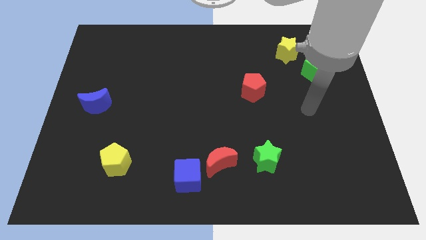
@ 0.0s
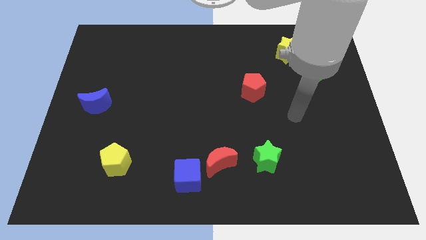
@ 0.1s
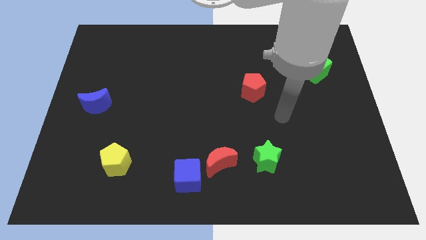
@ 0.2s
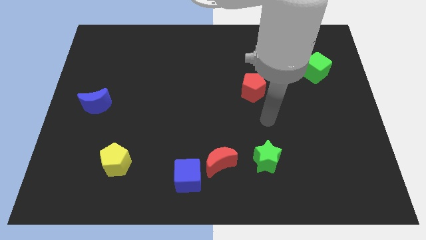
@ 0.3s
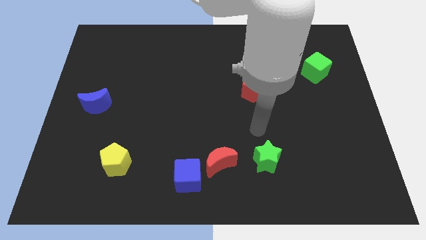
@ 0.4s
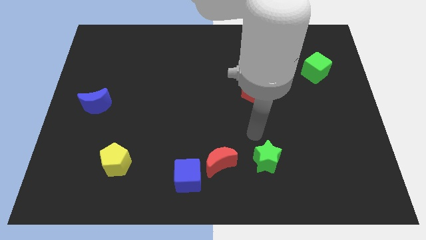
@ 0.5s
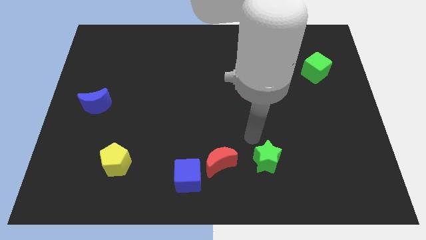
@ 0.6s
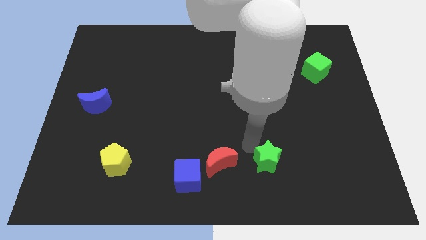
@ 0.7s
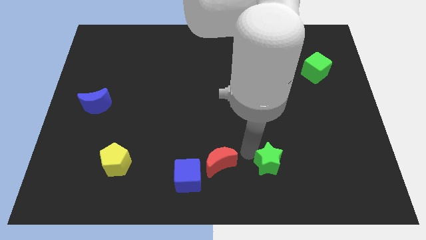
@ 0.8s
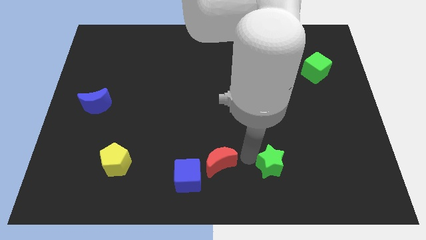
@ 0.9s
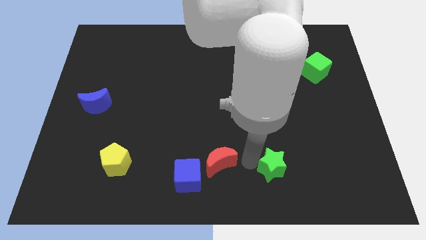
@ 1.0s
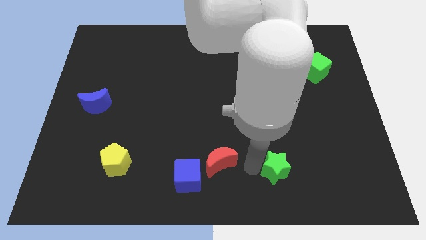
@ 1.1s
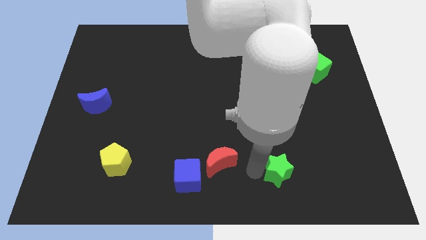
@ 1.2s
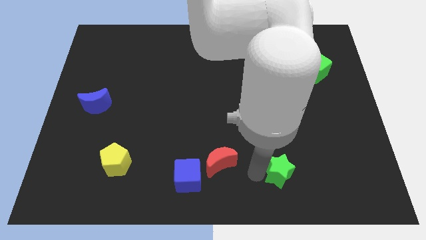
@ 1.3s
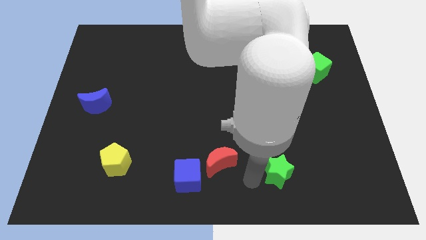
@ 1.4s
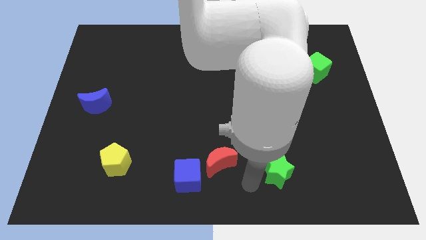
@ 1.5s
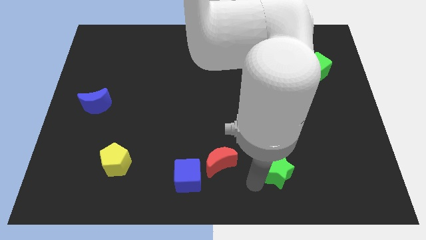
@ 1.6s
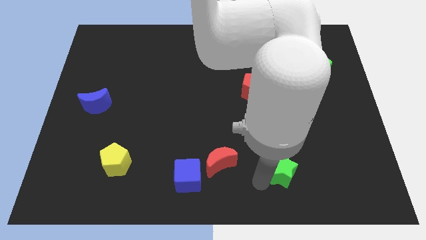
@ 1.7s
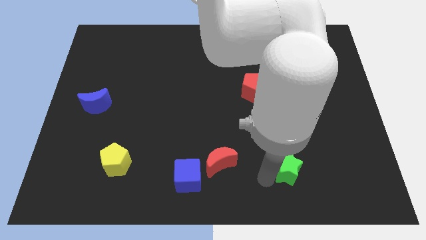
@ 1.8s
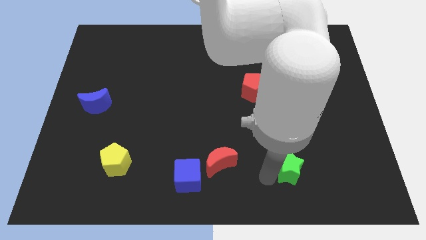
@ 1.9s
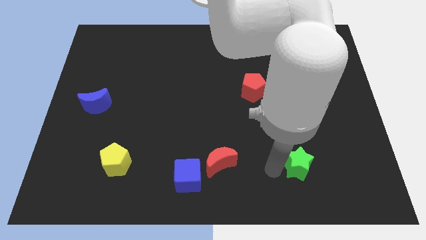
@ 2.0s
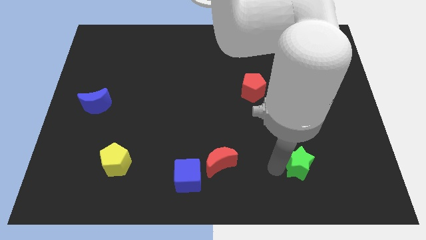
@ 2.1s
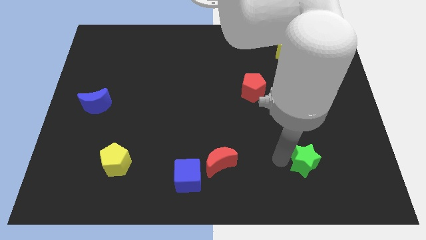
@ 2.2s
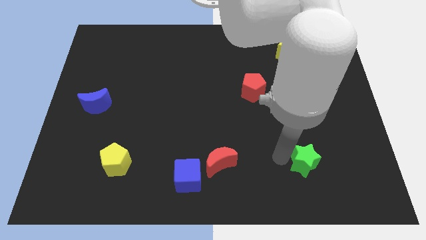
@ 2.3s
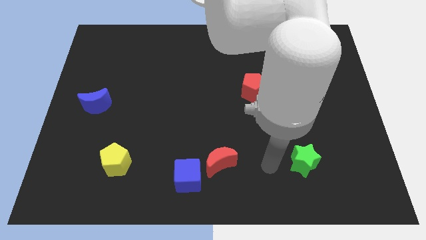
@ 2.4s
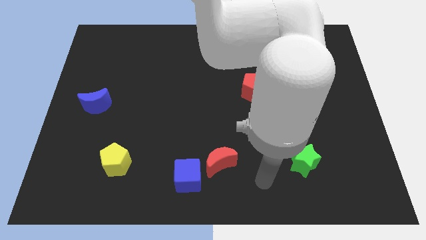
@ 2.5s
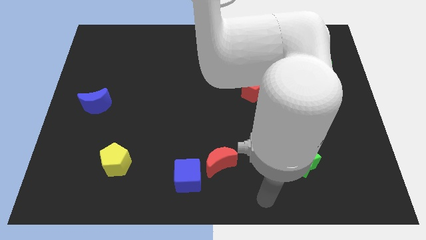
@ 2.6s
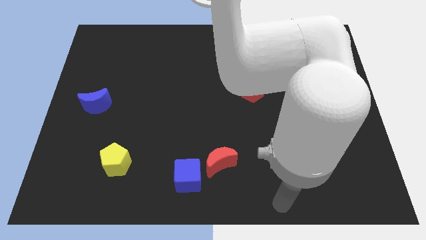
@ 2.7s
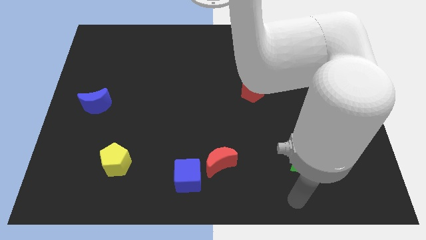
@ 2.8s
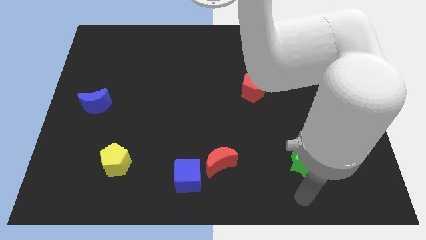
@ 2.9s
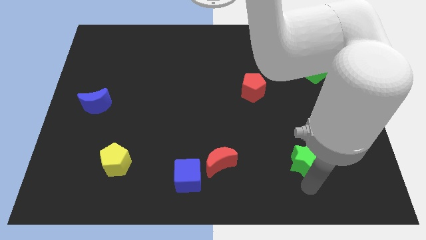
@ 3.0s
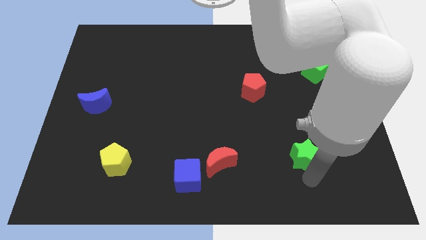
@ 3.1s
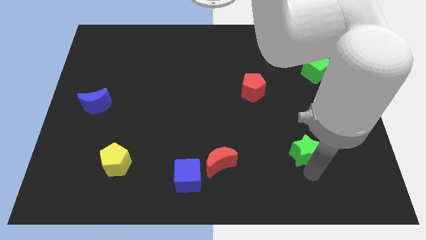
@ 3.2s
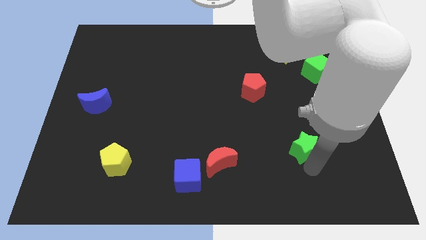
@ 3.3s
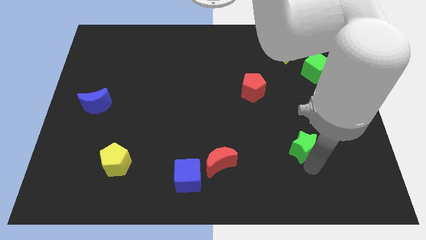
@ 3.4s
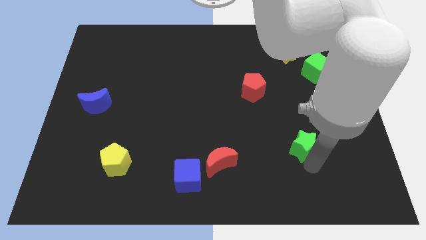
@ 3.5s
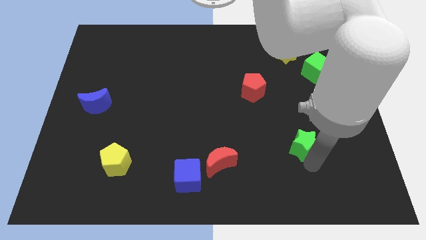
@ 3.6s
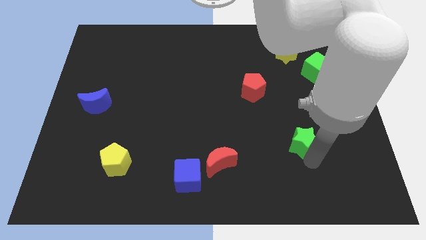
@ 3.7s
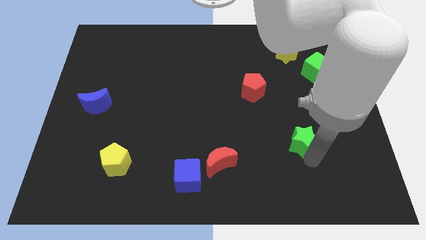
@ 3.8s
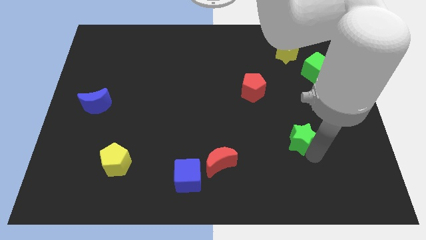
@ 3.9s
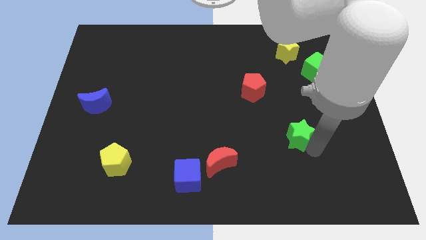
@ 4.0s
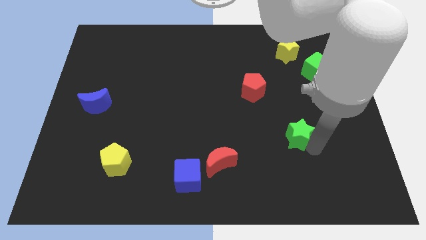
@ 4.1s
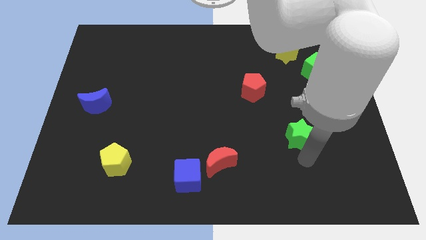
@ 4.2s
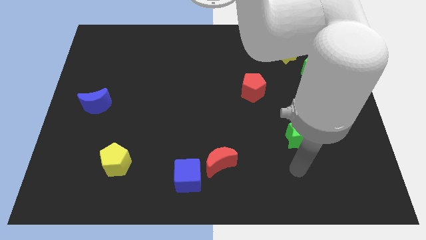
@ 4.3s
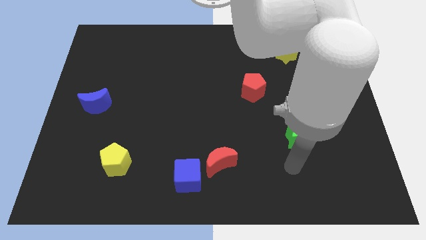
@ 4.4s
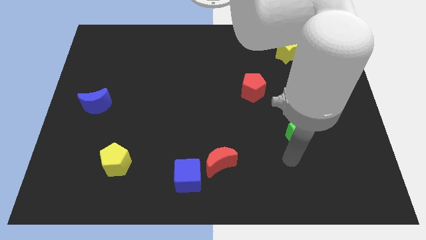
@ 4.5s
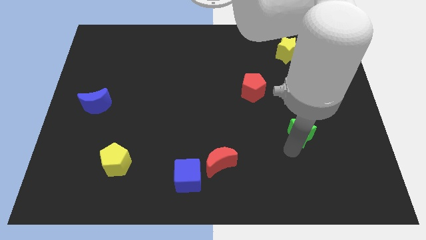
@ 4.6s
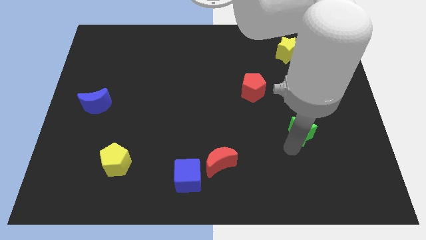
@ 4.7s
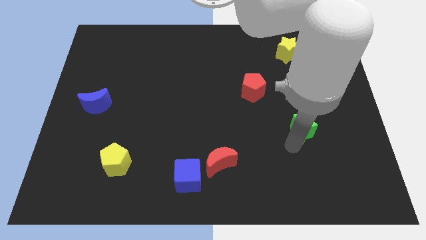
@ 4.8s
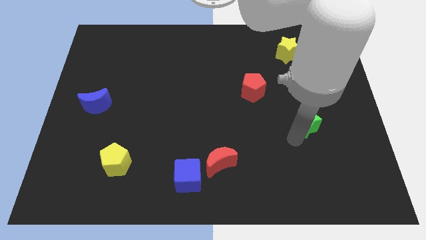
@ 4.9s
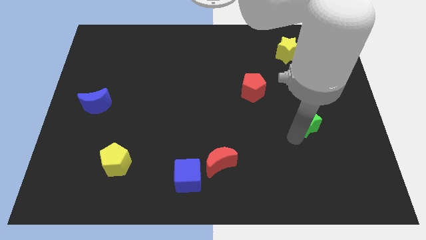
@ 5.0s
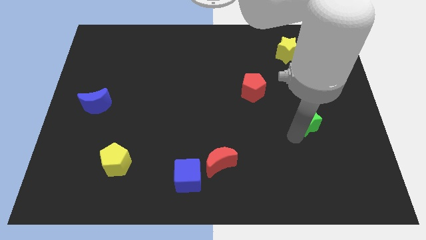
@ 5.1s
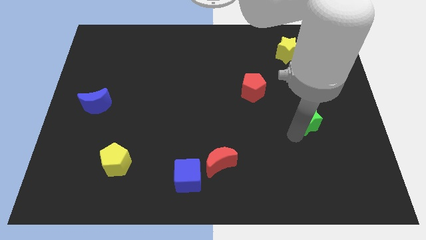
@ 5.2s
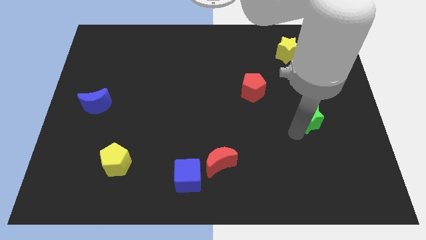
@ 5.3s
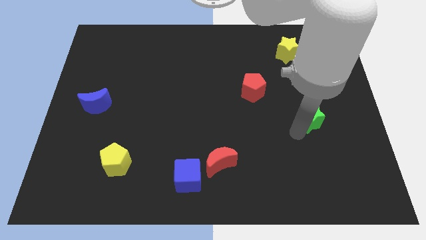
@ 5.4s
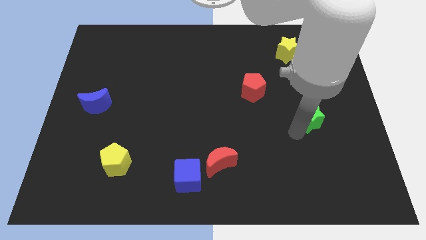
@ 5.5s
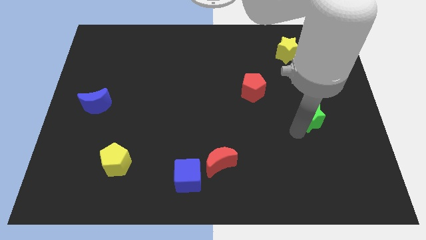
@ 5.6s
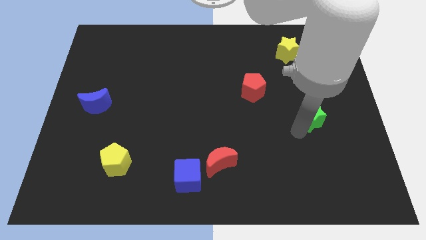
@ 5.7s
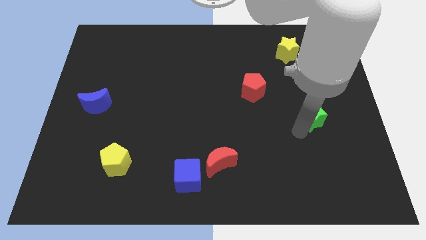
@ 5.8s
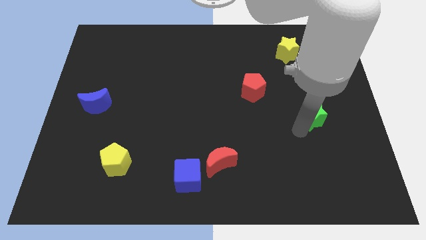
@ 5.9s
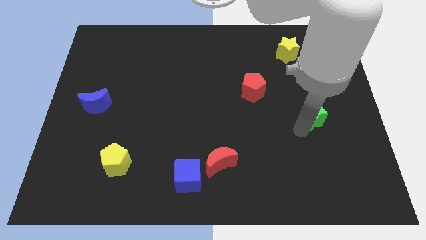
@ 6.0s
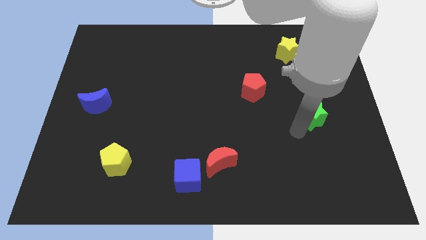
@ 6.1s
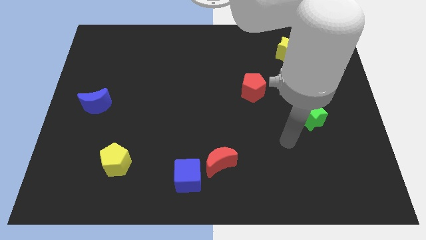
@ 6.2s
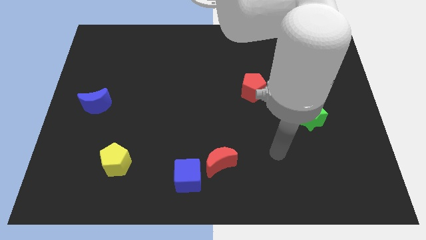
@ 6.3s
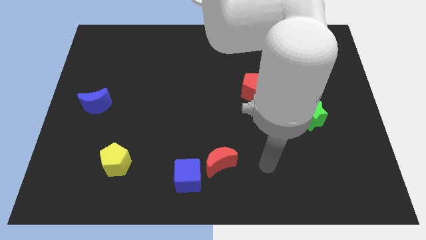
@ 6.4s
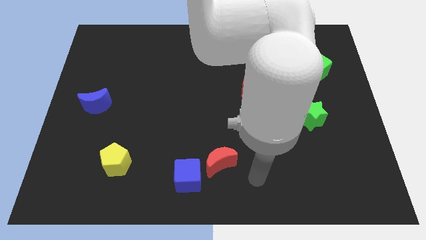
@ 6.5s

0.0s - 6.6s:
put the green star vertically below the green cube

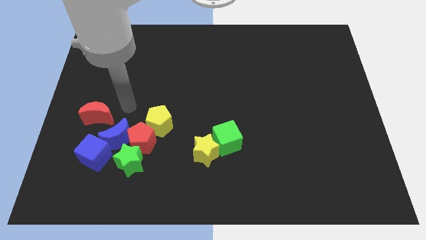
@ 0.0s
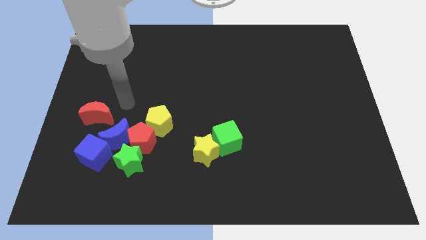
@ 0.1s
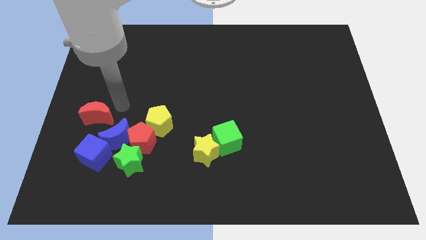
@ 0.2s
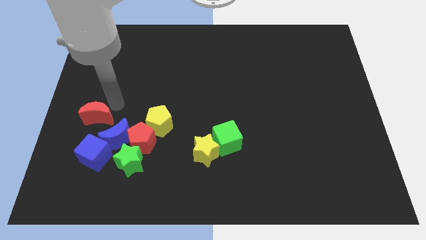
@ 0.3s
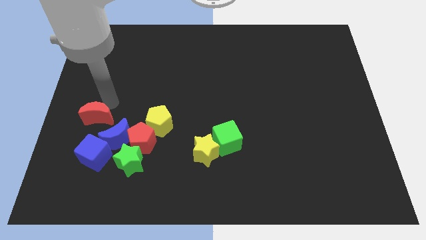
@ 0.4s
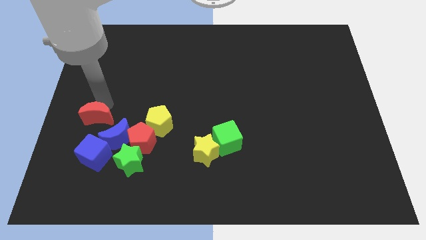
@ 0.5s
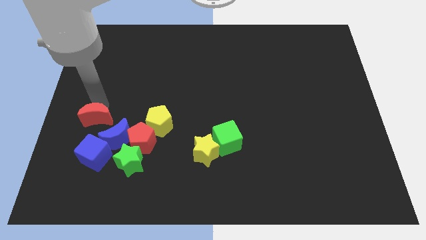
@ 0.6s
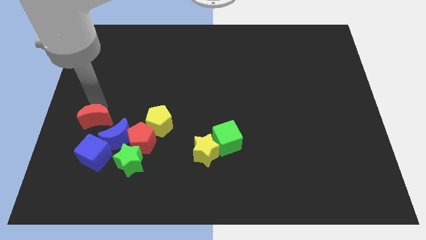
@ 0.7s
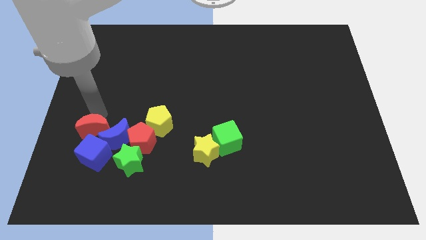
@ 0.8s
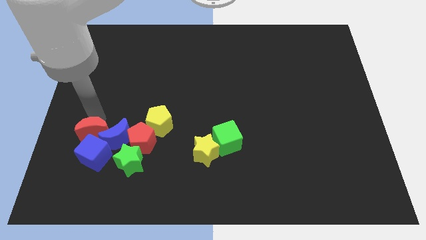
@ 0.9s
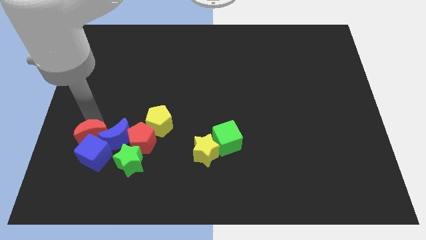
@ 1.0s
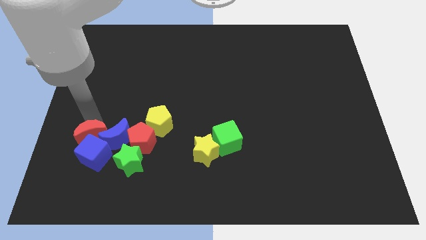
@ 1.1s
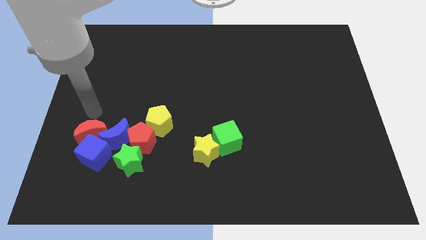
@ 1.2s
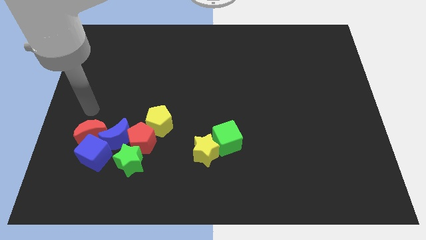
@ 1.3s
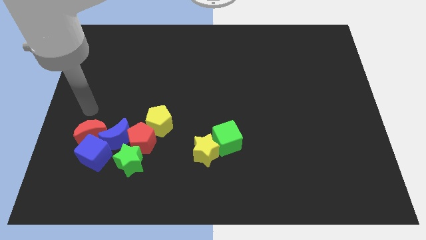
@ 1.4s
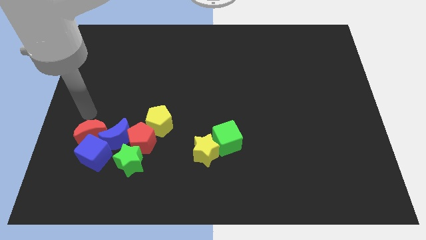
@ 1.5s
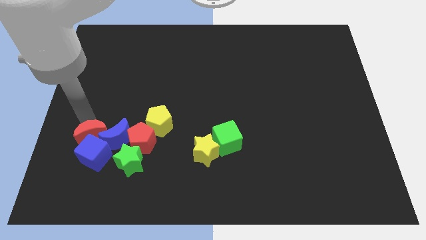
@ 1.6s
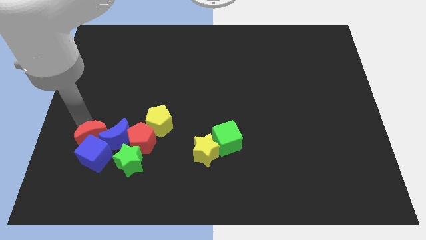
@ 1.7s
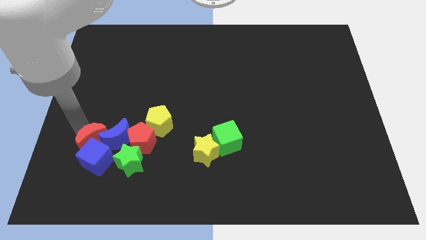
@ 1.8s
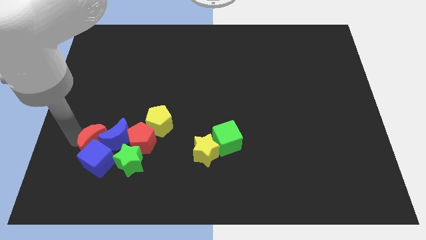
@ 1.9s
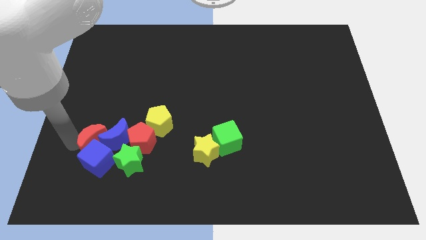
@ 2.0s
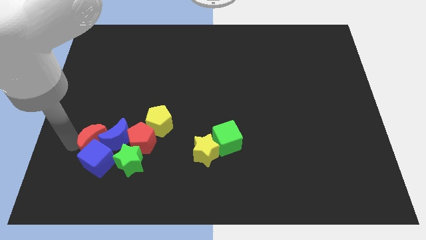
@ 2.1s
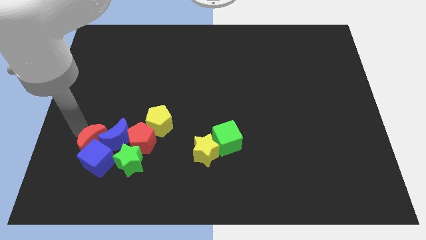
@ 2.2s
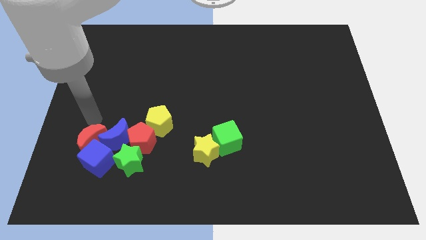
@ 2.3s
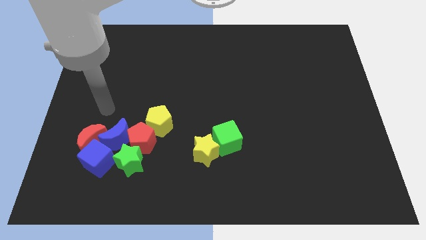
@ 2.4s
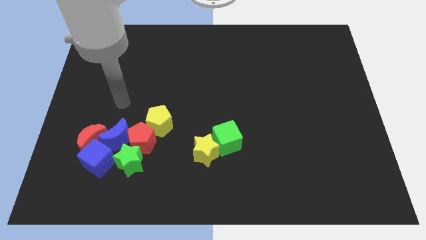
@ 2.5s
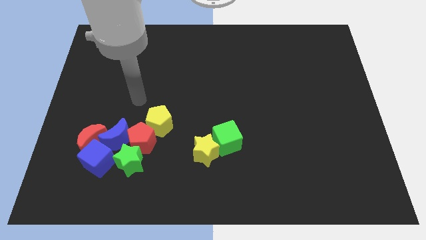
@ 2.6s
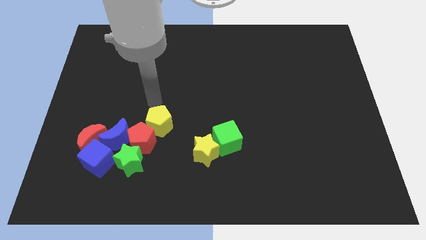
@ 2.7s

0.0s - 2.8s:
push the red moon into the blue blocks
